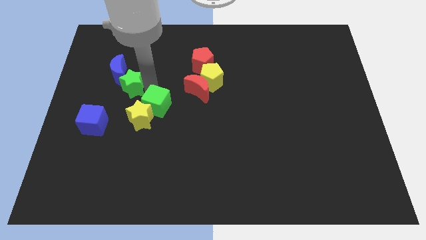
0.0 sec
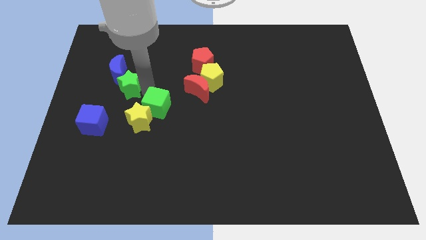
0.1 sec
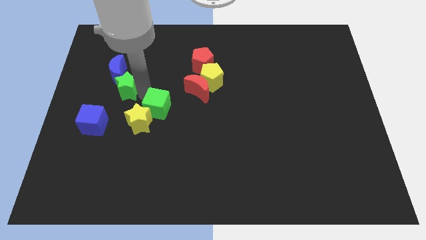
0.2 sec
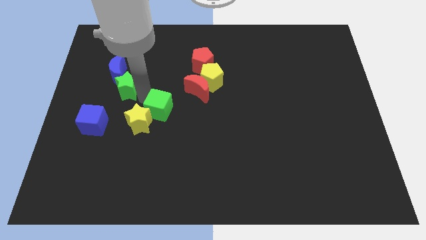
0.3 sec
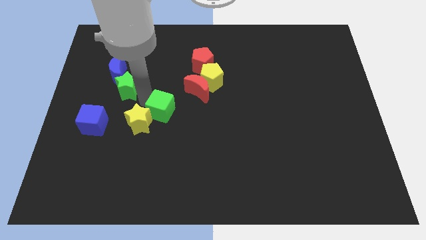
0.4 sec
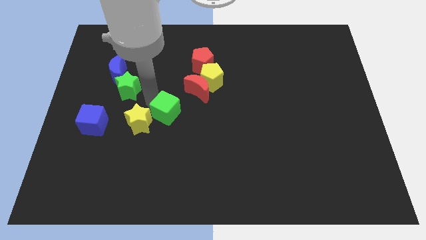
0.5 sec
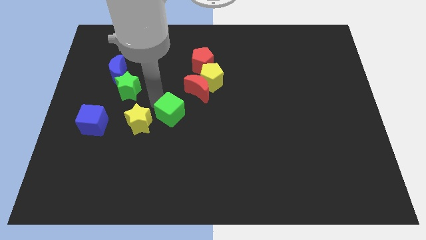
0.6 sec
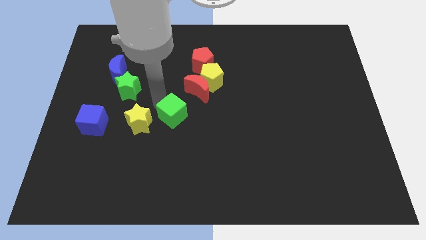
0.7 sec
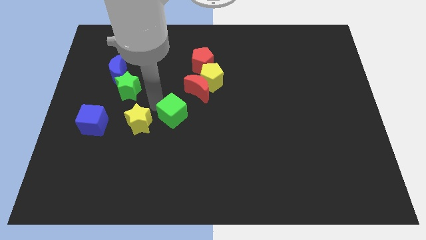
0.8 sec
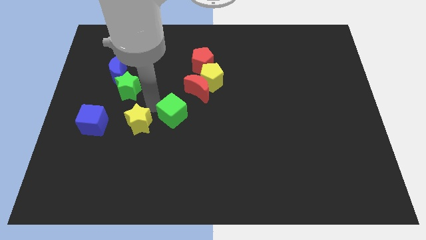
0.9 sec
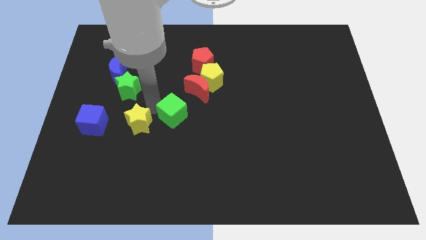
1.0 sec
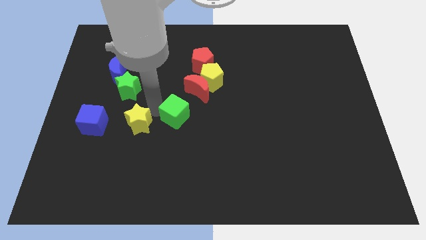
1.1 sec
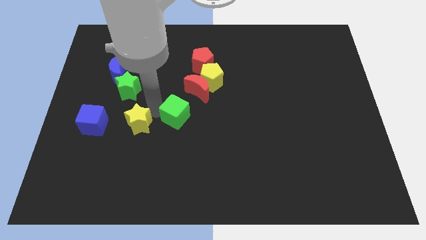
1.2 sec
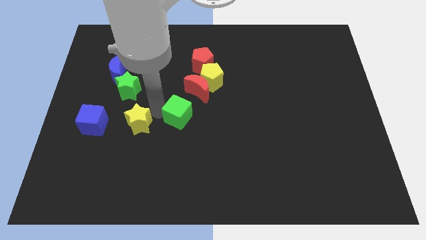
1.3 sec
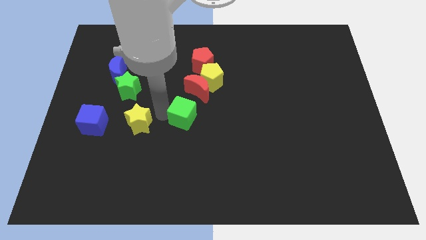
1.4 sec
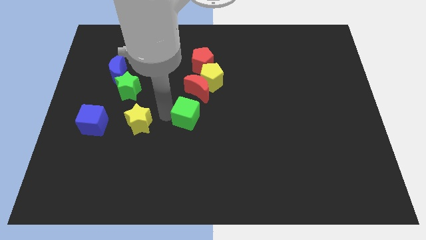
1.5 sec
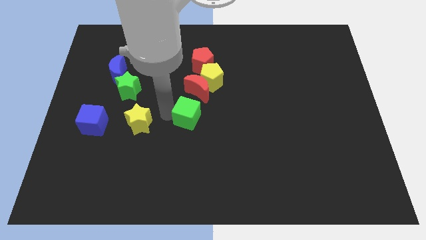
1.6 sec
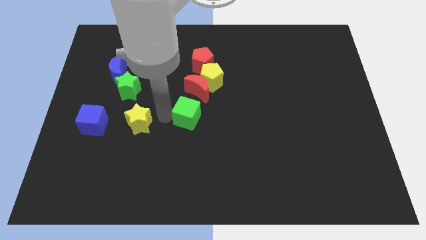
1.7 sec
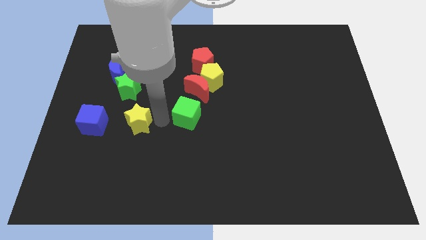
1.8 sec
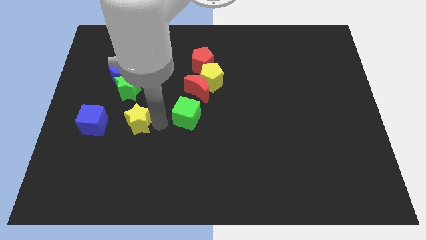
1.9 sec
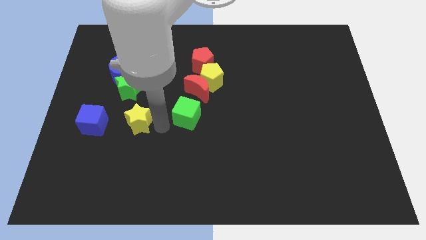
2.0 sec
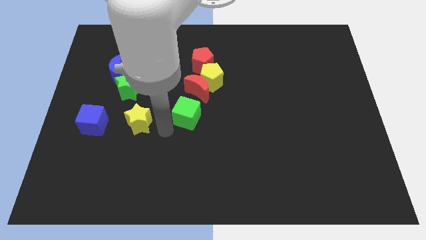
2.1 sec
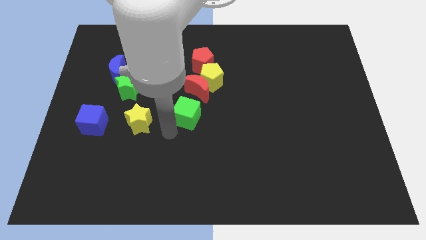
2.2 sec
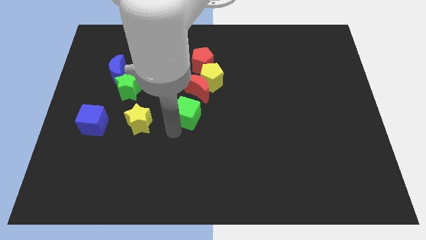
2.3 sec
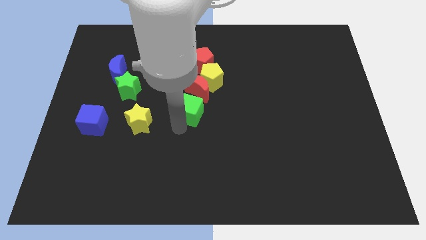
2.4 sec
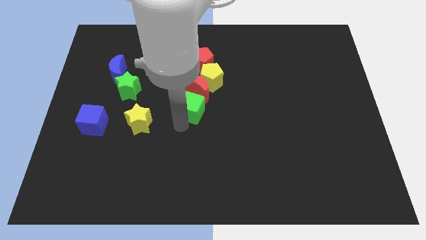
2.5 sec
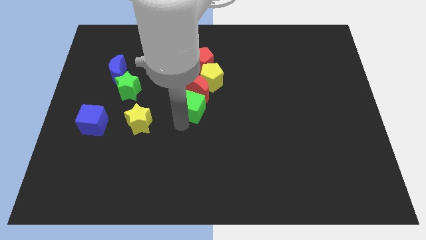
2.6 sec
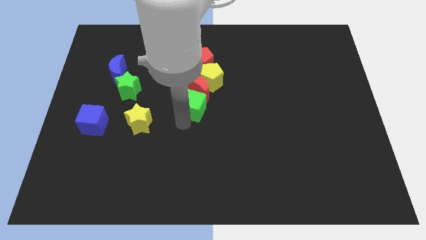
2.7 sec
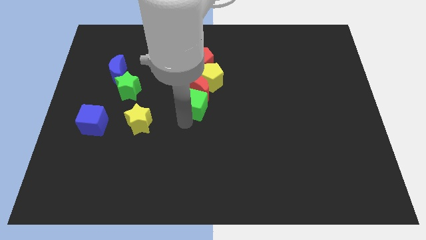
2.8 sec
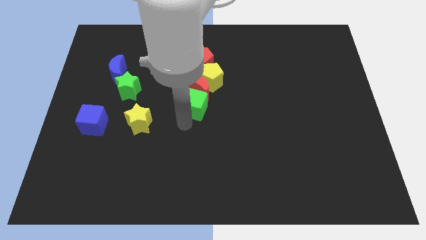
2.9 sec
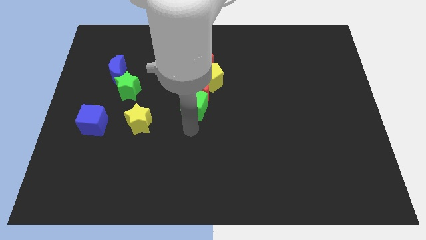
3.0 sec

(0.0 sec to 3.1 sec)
place green cube below red moon

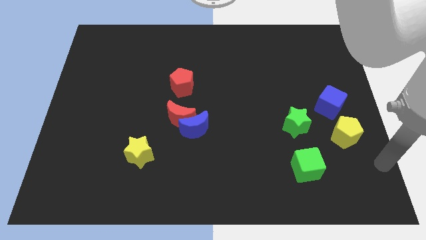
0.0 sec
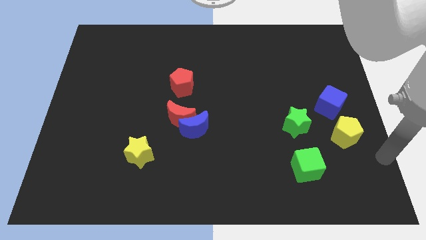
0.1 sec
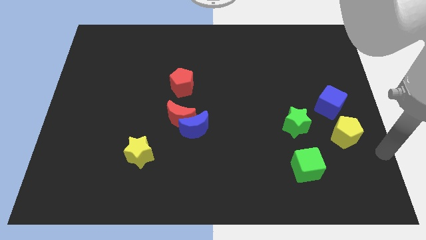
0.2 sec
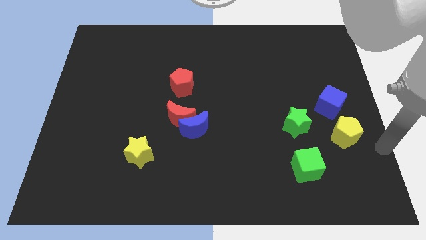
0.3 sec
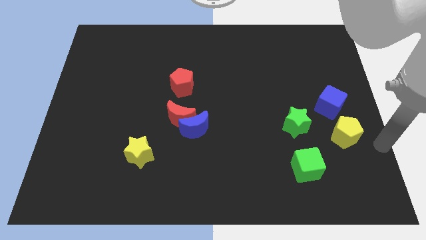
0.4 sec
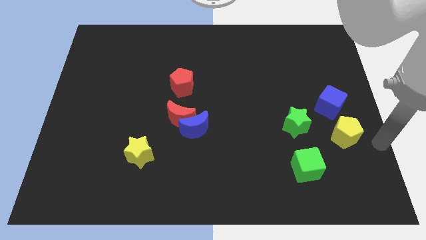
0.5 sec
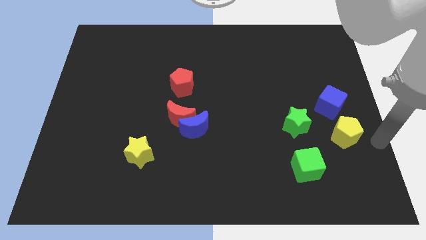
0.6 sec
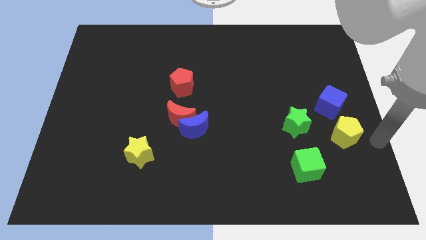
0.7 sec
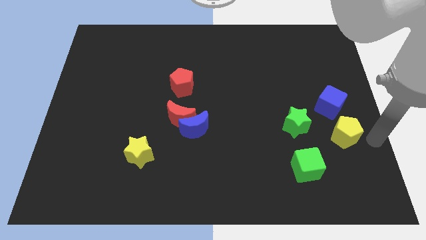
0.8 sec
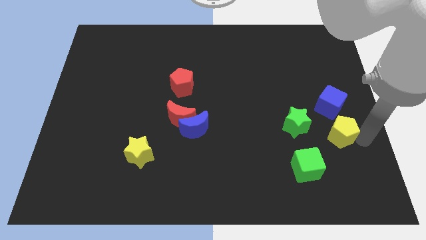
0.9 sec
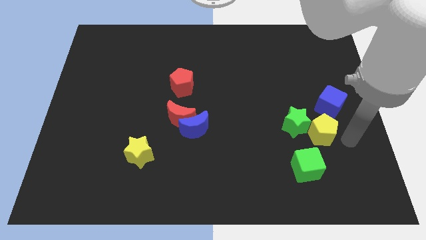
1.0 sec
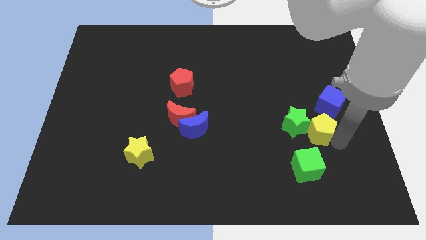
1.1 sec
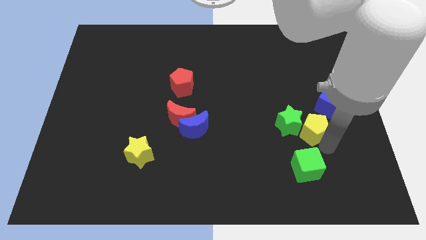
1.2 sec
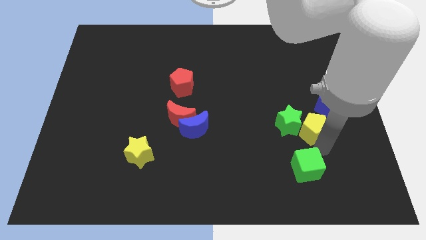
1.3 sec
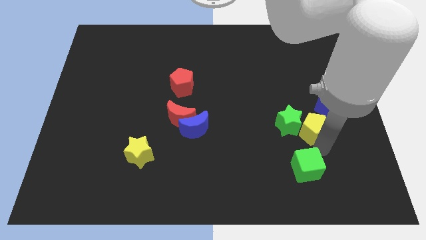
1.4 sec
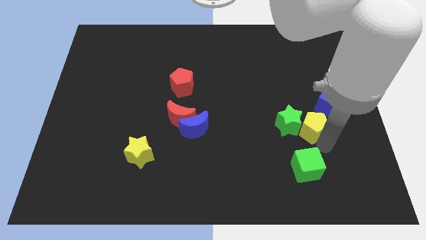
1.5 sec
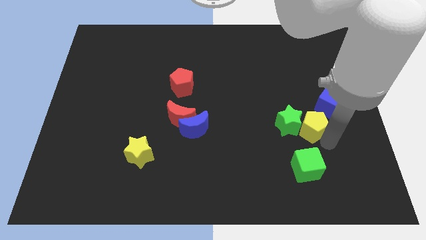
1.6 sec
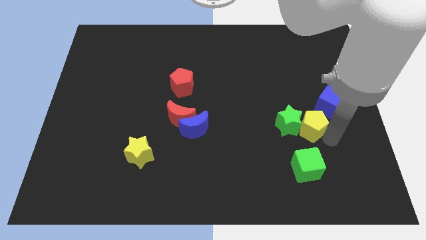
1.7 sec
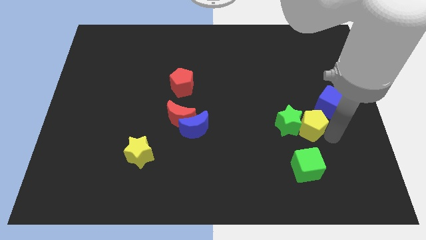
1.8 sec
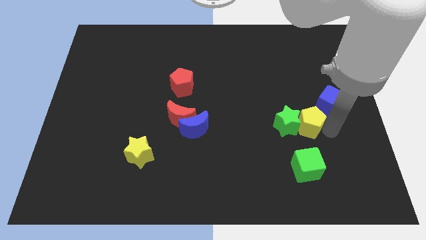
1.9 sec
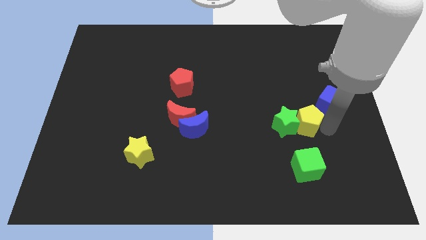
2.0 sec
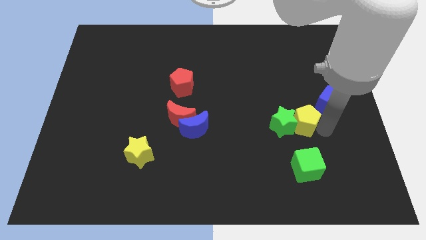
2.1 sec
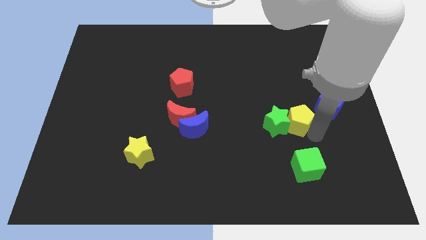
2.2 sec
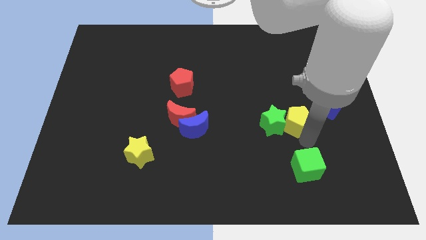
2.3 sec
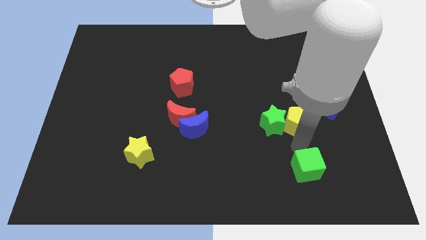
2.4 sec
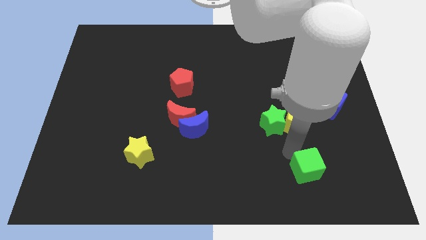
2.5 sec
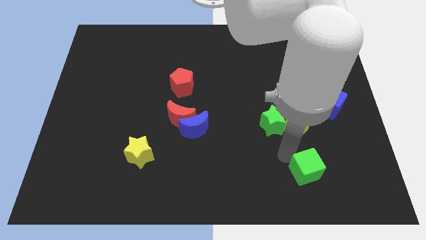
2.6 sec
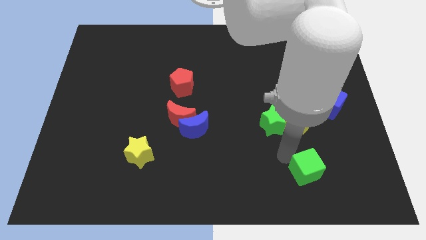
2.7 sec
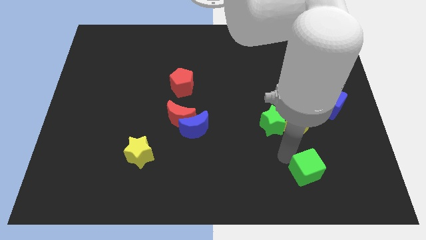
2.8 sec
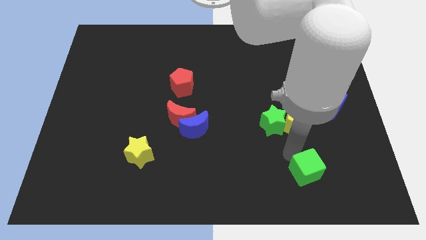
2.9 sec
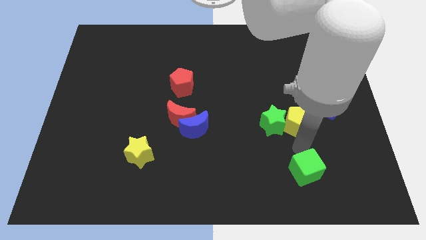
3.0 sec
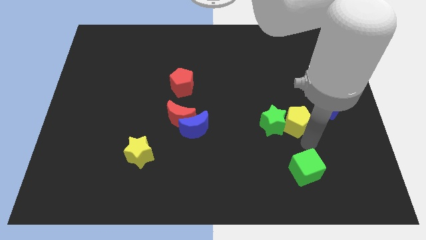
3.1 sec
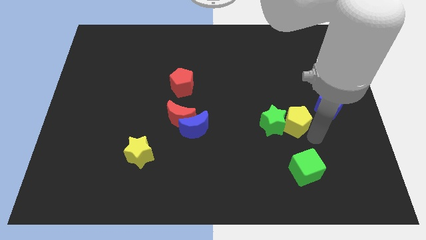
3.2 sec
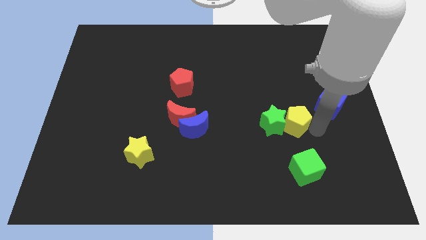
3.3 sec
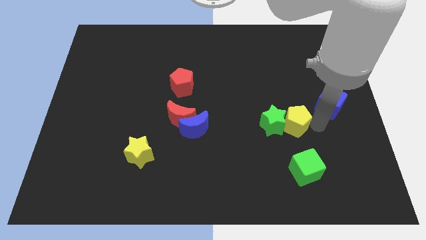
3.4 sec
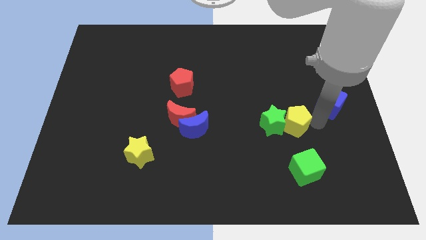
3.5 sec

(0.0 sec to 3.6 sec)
push the yellow pentagon right into the green star

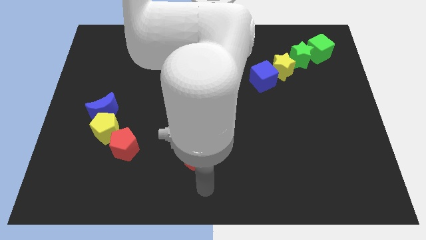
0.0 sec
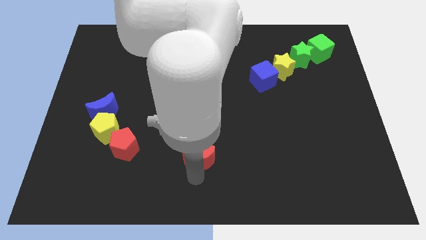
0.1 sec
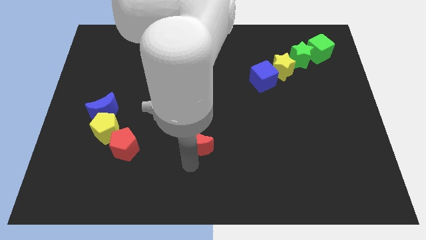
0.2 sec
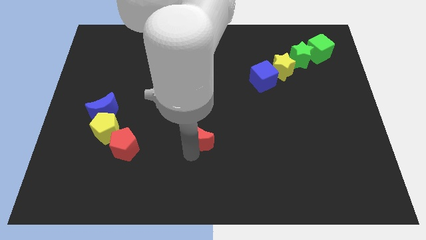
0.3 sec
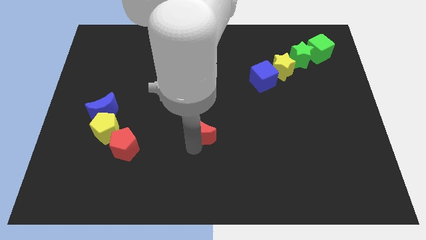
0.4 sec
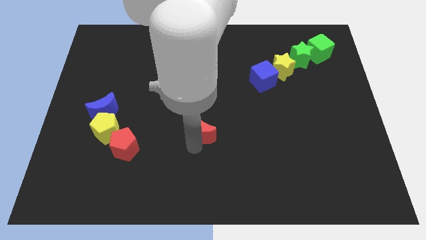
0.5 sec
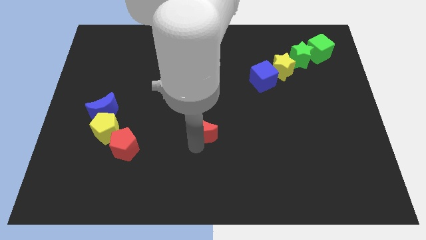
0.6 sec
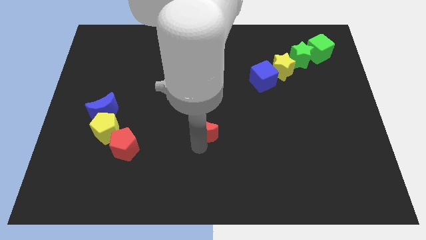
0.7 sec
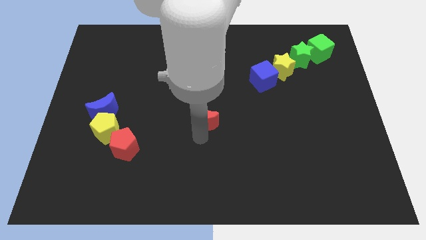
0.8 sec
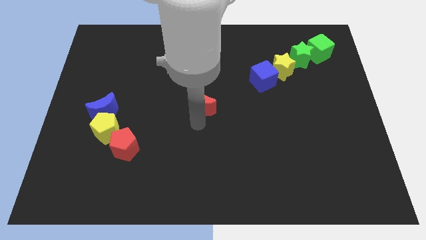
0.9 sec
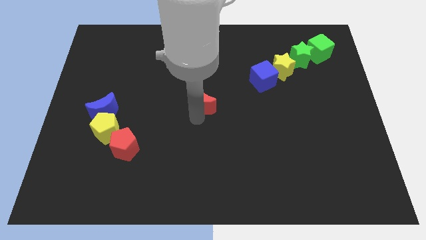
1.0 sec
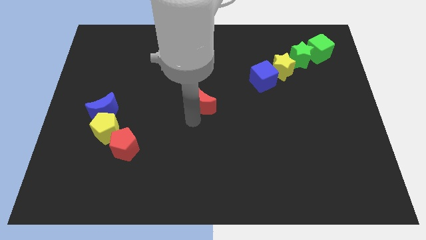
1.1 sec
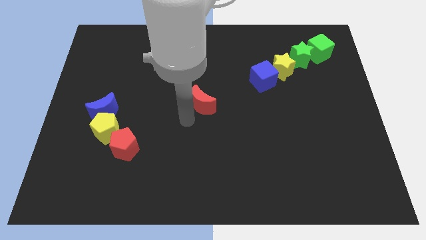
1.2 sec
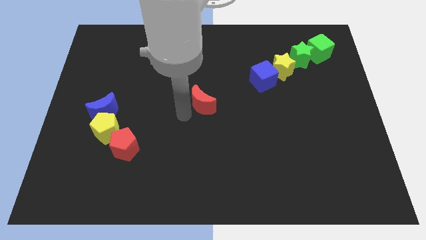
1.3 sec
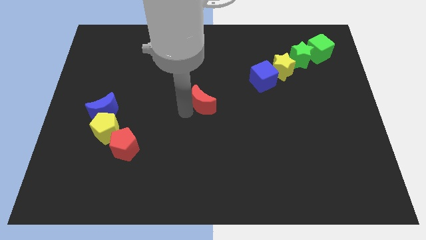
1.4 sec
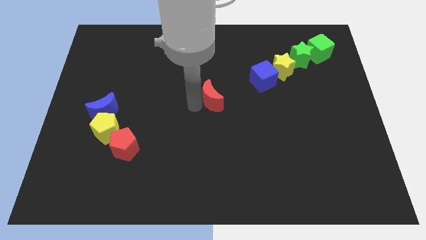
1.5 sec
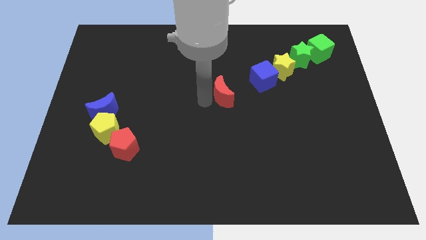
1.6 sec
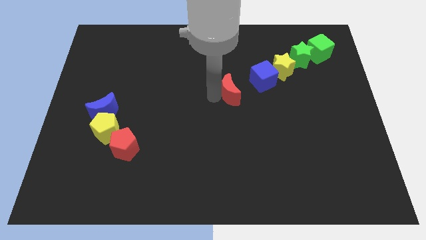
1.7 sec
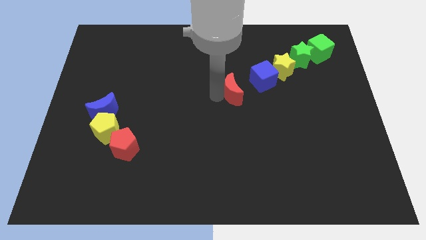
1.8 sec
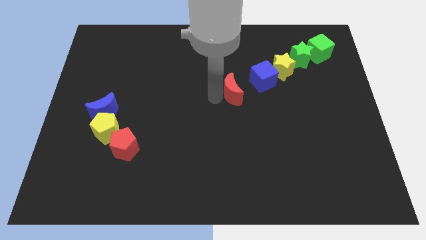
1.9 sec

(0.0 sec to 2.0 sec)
push the red crescent towards the blue cube
